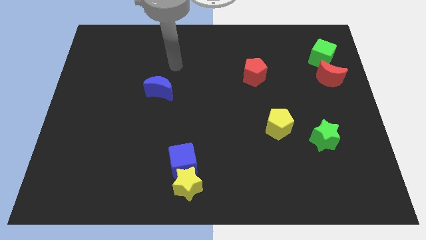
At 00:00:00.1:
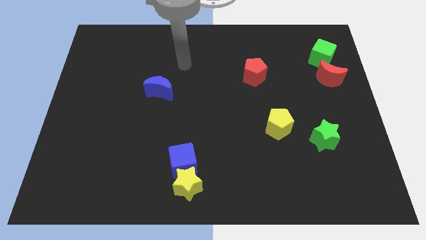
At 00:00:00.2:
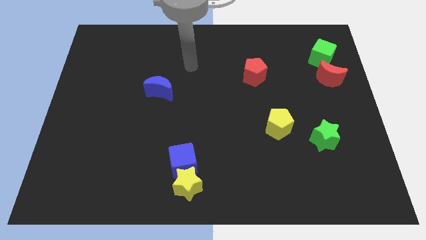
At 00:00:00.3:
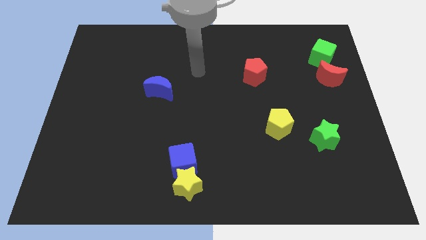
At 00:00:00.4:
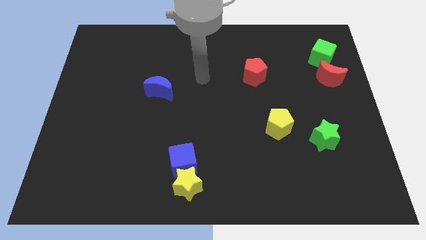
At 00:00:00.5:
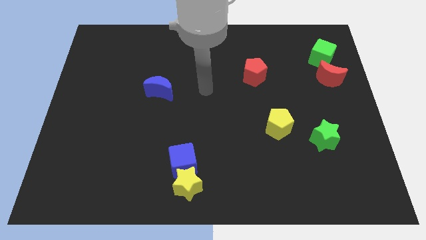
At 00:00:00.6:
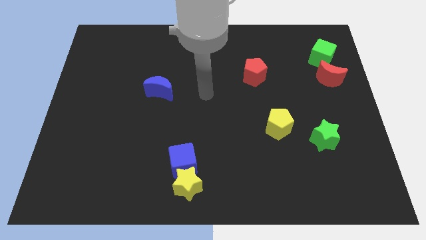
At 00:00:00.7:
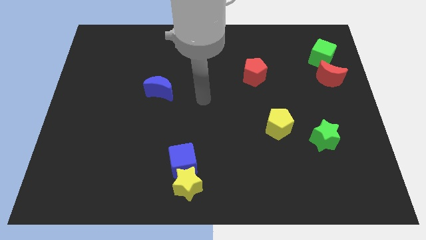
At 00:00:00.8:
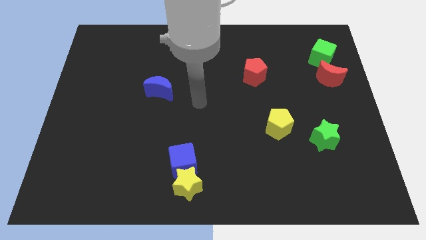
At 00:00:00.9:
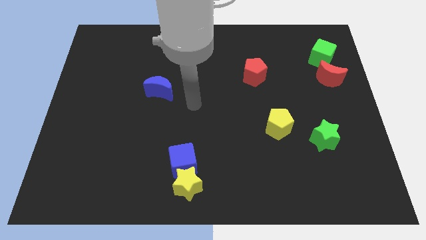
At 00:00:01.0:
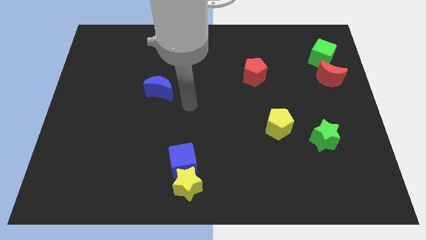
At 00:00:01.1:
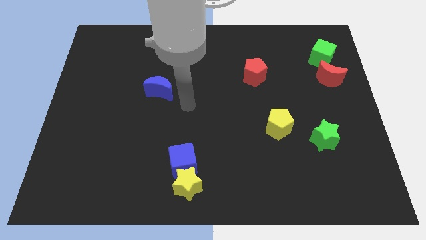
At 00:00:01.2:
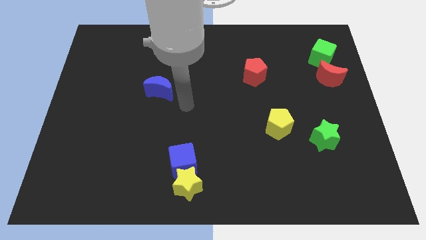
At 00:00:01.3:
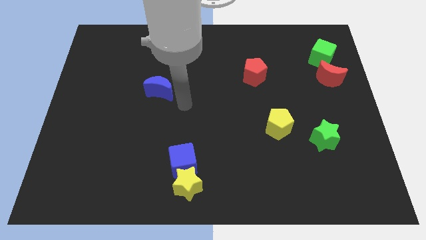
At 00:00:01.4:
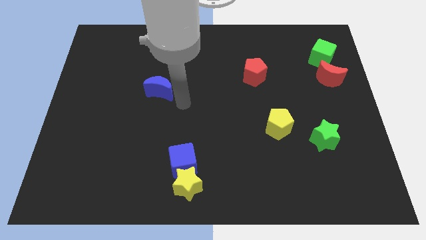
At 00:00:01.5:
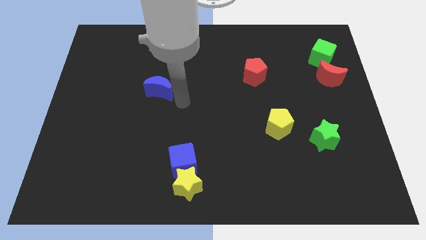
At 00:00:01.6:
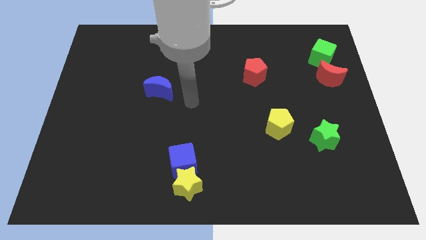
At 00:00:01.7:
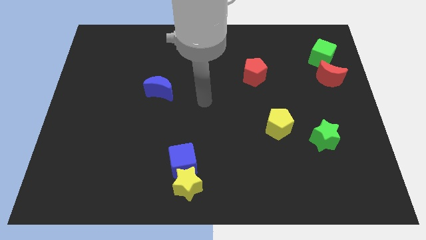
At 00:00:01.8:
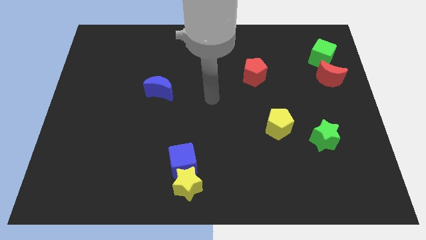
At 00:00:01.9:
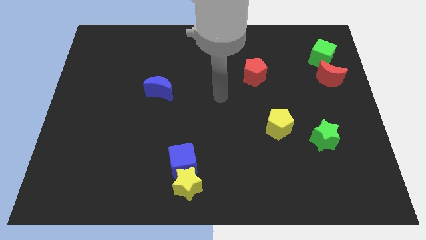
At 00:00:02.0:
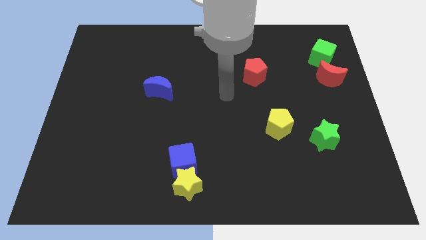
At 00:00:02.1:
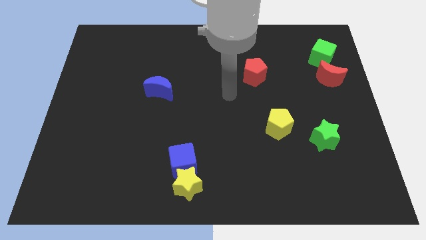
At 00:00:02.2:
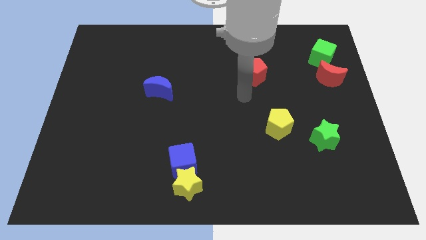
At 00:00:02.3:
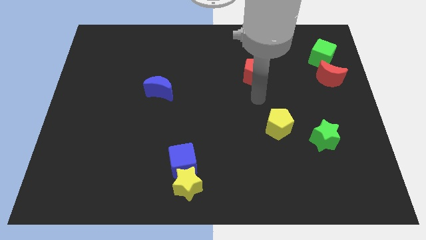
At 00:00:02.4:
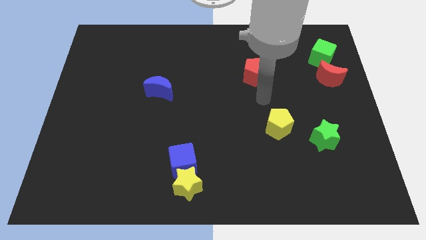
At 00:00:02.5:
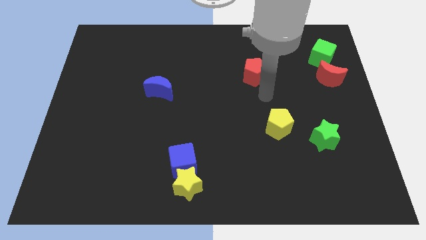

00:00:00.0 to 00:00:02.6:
move your arm near to the red pentagon

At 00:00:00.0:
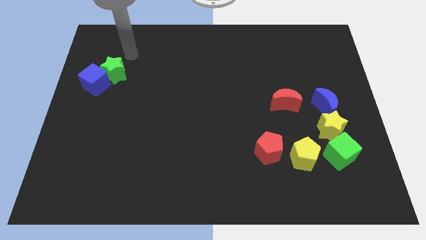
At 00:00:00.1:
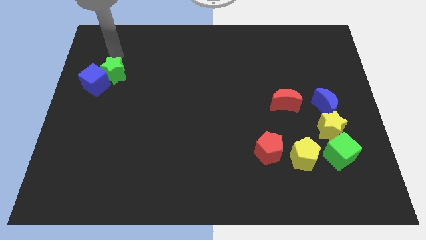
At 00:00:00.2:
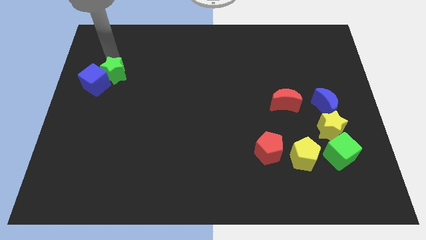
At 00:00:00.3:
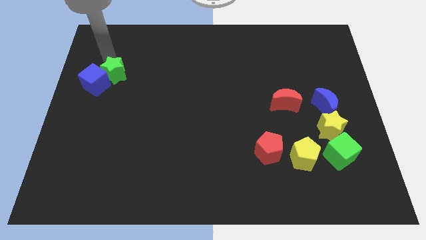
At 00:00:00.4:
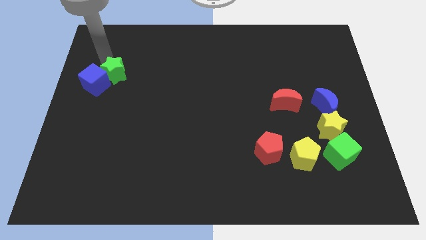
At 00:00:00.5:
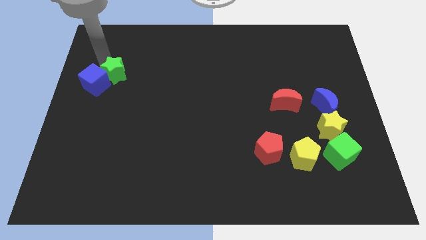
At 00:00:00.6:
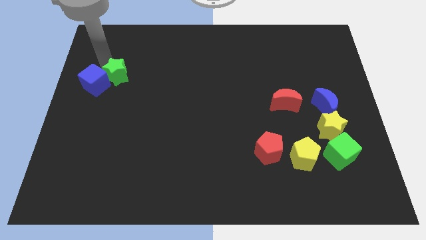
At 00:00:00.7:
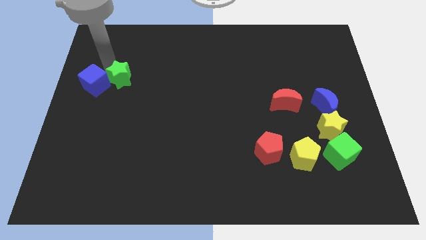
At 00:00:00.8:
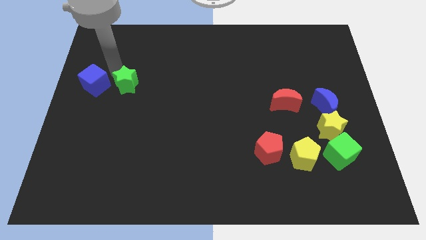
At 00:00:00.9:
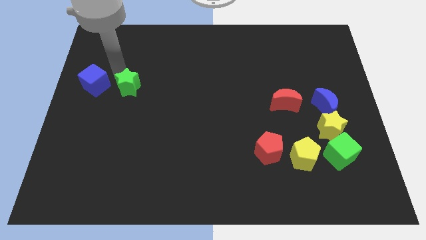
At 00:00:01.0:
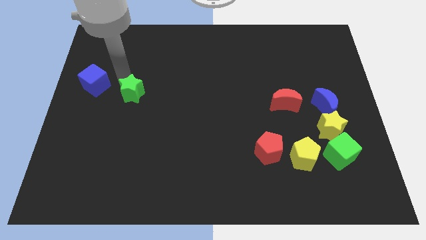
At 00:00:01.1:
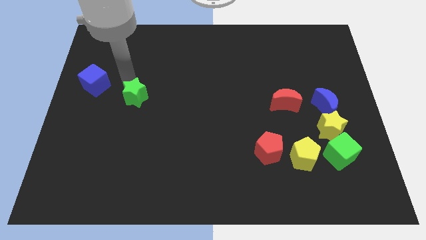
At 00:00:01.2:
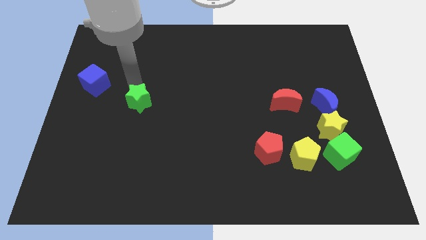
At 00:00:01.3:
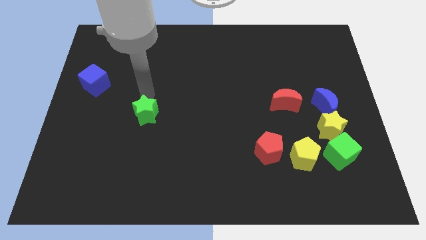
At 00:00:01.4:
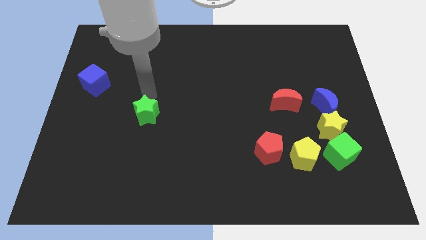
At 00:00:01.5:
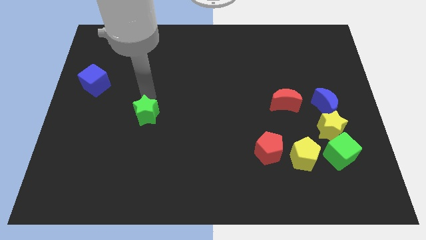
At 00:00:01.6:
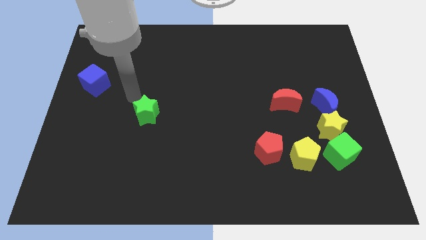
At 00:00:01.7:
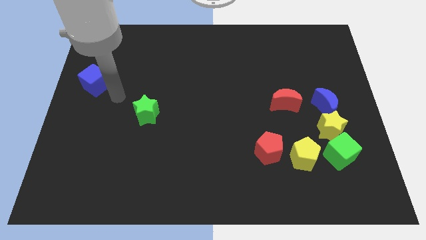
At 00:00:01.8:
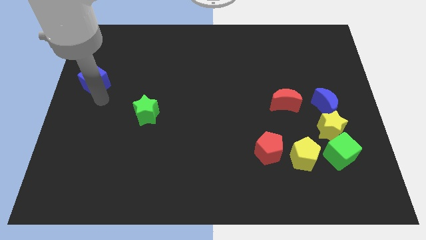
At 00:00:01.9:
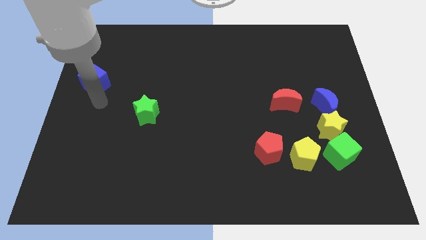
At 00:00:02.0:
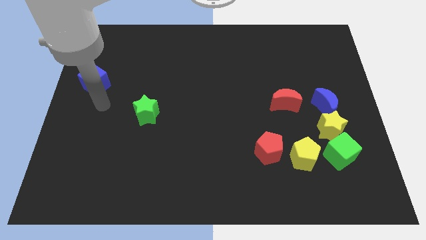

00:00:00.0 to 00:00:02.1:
separate green star from blue cube

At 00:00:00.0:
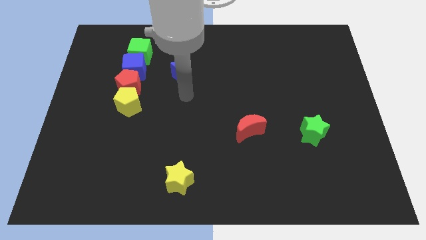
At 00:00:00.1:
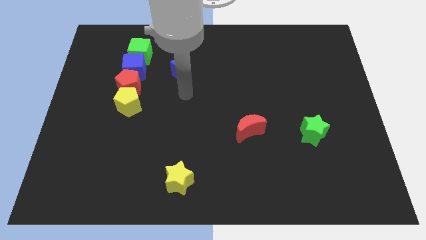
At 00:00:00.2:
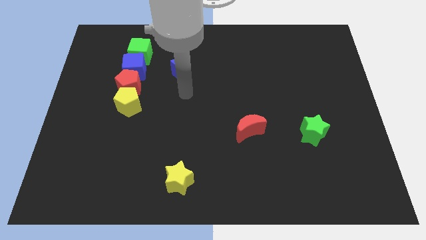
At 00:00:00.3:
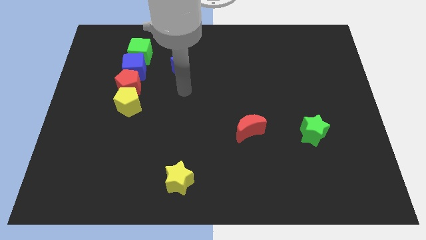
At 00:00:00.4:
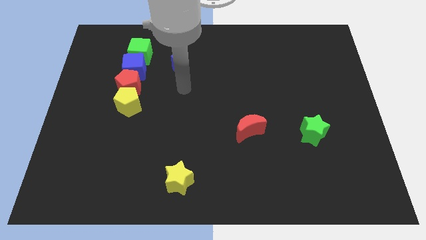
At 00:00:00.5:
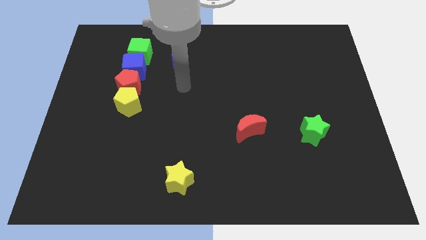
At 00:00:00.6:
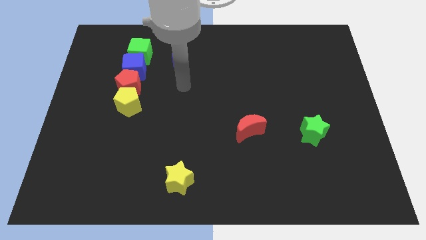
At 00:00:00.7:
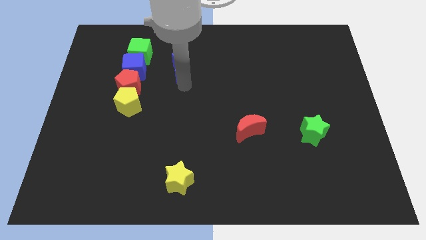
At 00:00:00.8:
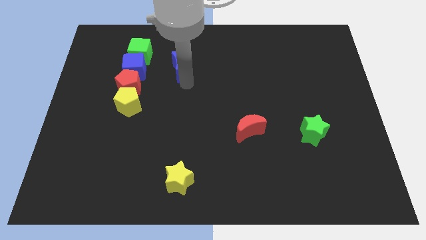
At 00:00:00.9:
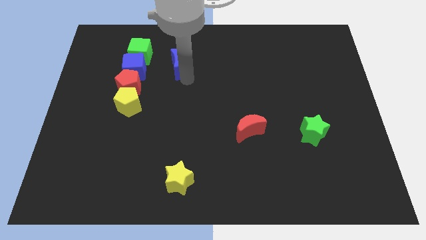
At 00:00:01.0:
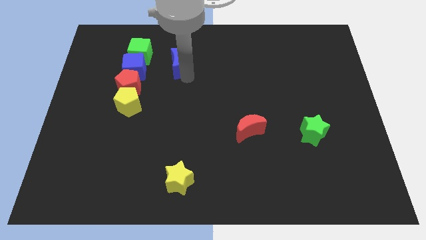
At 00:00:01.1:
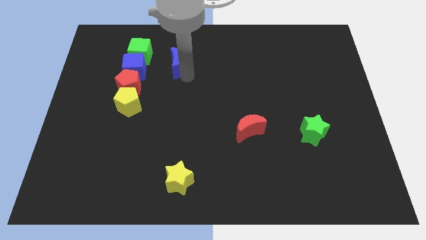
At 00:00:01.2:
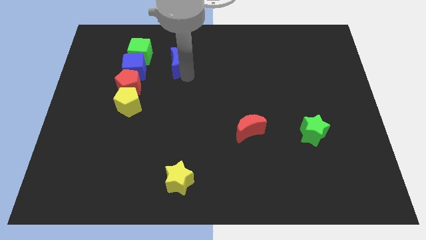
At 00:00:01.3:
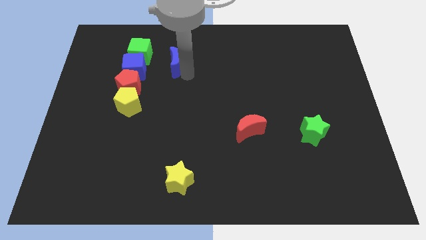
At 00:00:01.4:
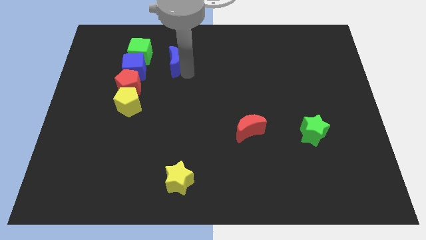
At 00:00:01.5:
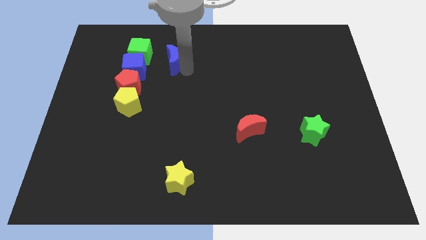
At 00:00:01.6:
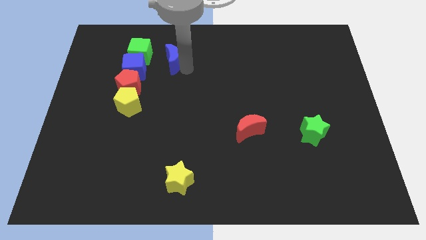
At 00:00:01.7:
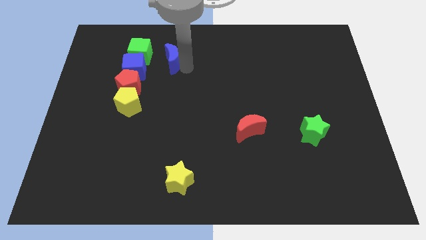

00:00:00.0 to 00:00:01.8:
place blue moon right of green cube

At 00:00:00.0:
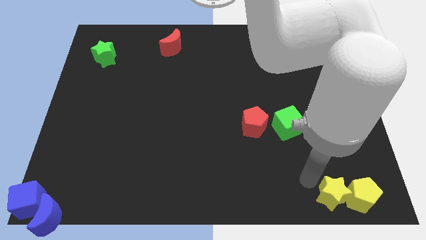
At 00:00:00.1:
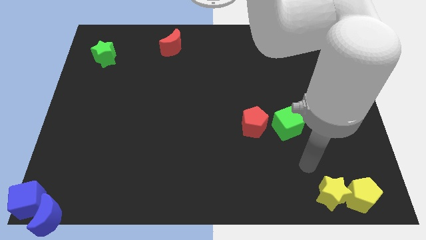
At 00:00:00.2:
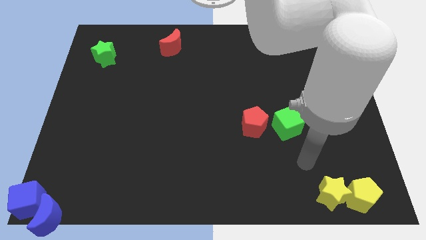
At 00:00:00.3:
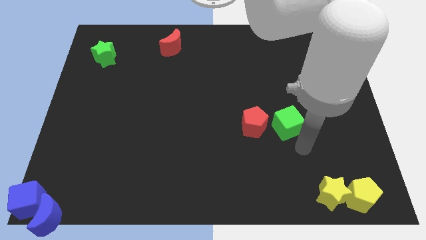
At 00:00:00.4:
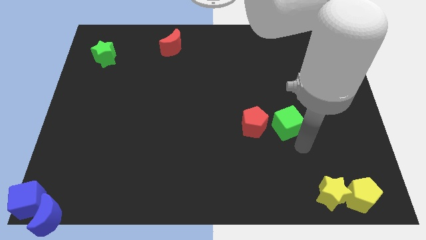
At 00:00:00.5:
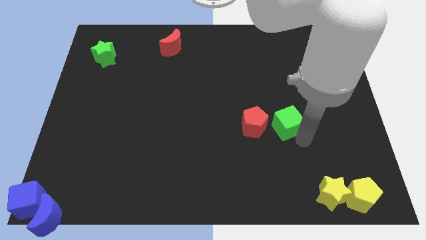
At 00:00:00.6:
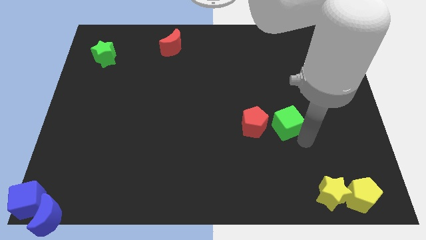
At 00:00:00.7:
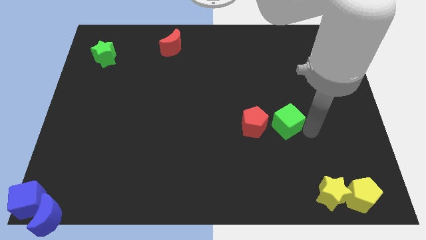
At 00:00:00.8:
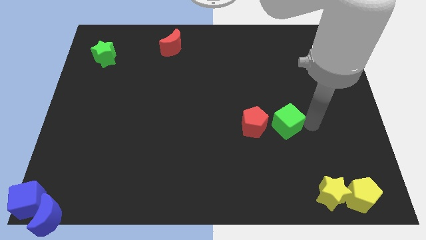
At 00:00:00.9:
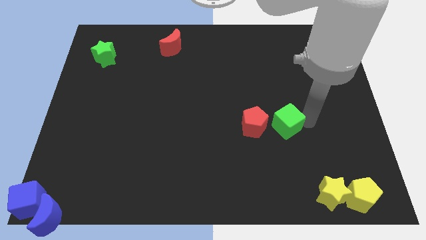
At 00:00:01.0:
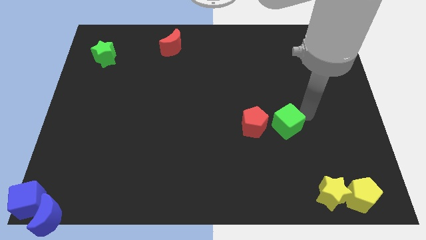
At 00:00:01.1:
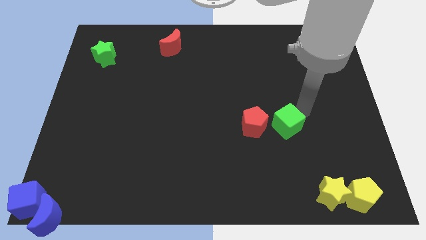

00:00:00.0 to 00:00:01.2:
point your arm at the top right of the green cube

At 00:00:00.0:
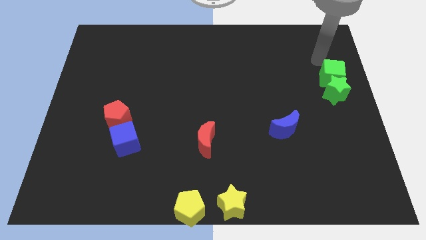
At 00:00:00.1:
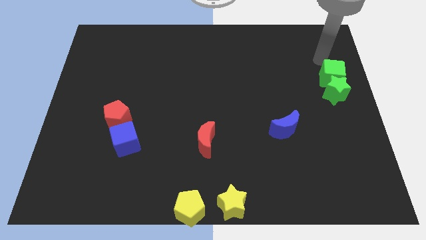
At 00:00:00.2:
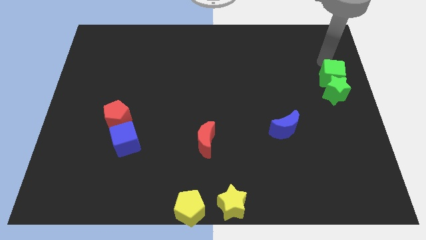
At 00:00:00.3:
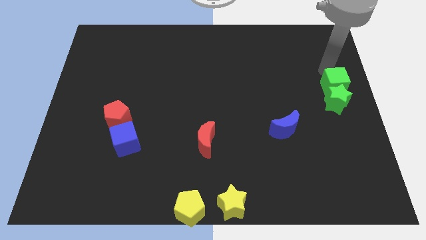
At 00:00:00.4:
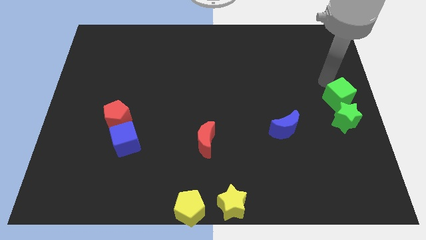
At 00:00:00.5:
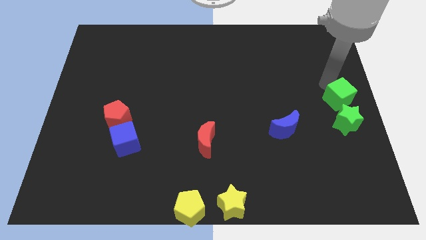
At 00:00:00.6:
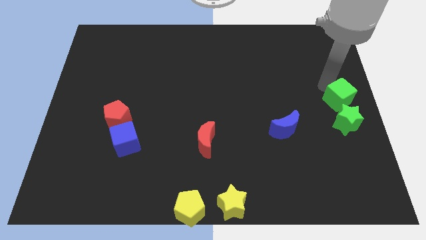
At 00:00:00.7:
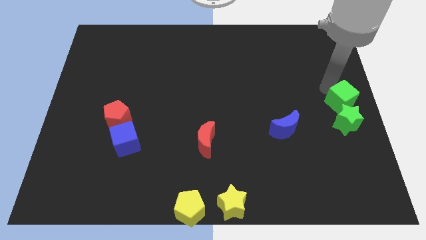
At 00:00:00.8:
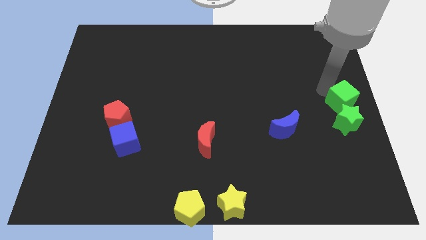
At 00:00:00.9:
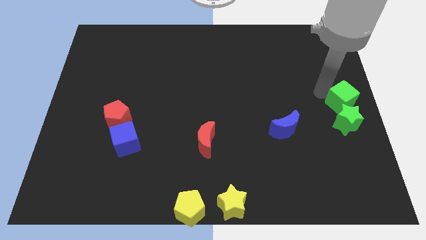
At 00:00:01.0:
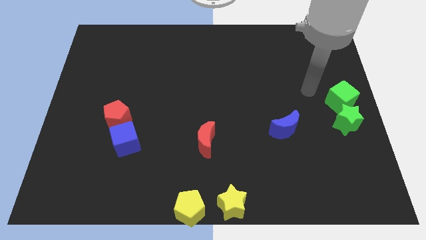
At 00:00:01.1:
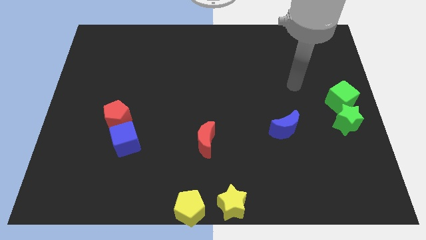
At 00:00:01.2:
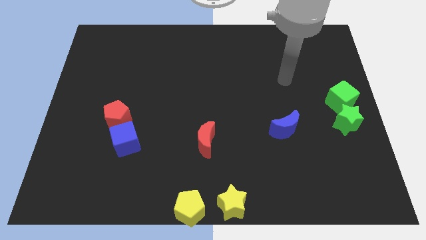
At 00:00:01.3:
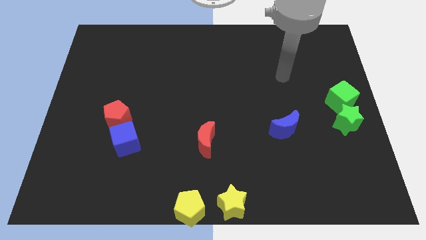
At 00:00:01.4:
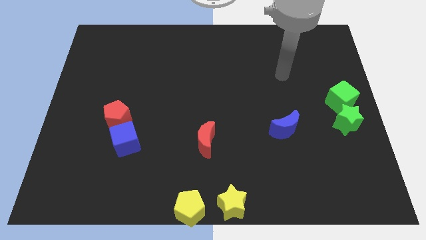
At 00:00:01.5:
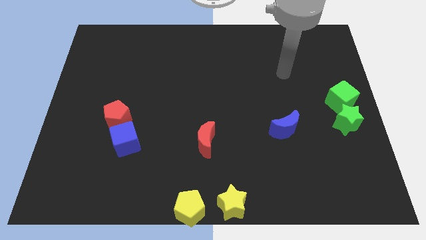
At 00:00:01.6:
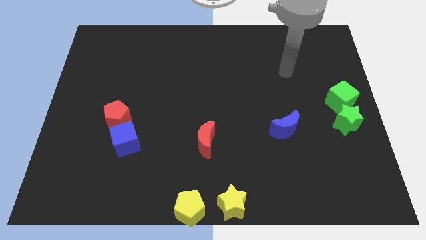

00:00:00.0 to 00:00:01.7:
push green cube and green star towards down
